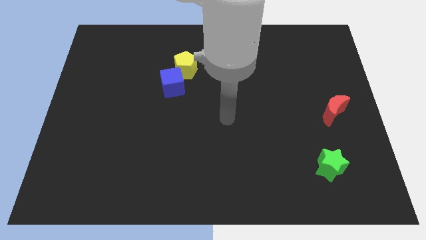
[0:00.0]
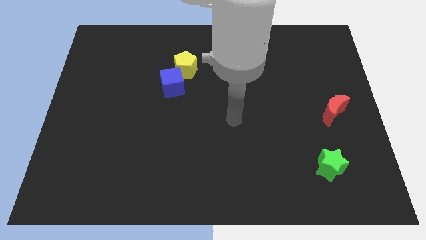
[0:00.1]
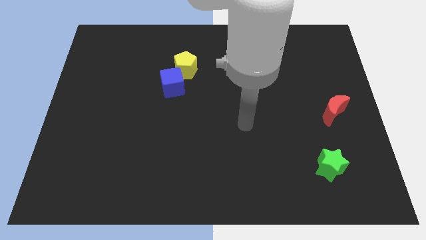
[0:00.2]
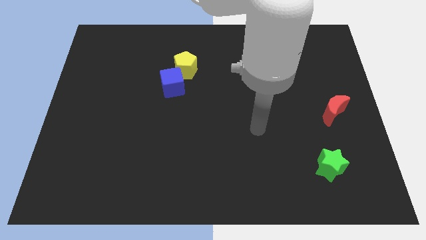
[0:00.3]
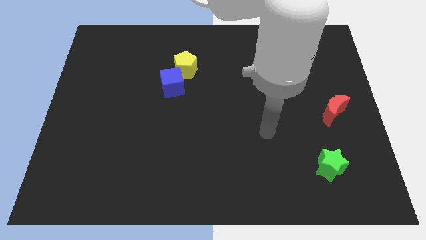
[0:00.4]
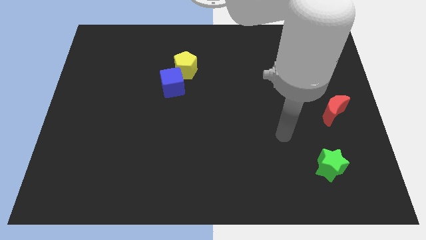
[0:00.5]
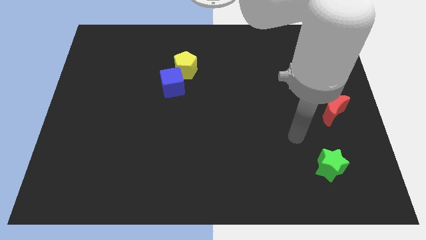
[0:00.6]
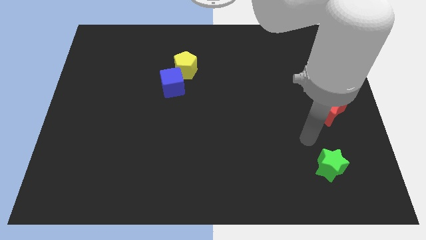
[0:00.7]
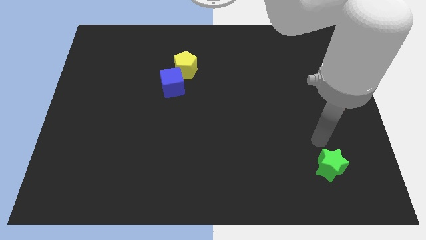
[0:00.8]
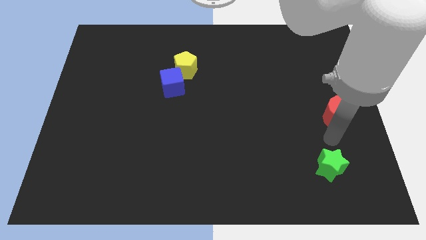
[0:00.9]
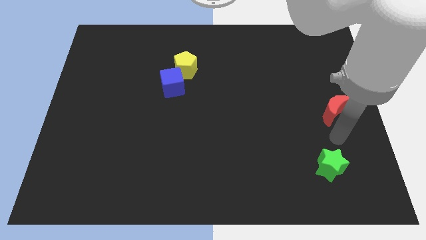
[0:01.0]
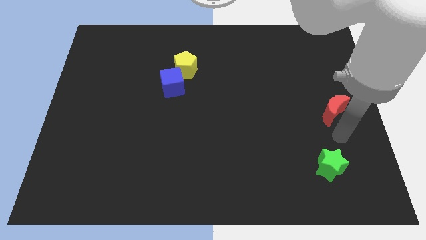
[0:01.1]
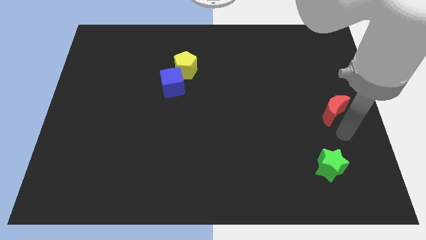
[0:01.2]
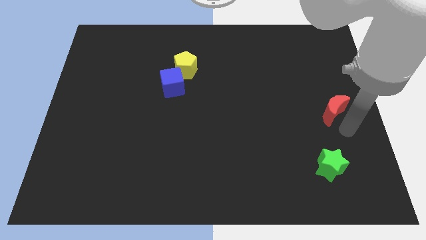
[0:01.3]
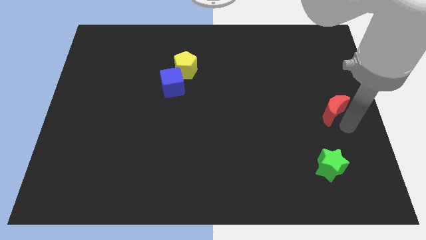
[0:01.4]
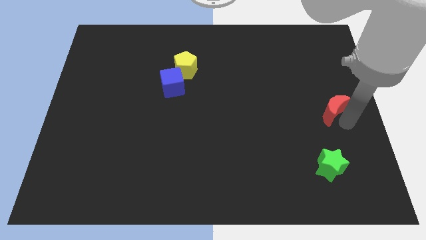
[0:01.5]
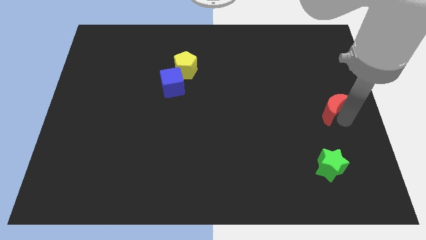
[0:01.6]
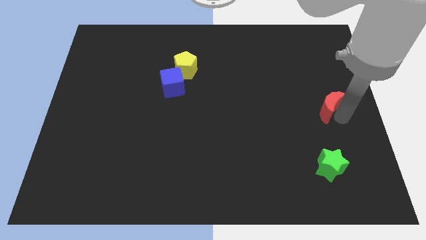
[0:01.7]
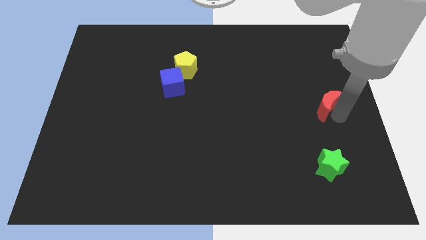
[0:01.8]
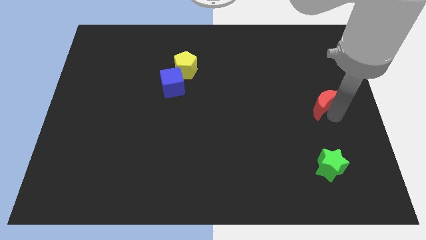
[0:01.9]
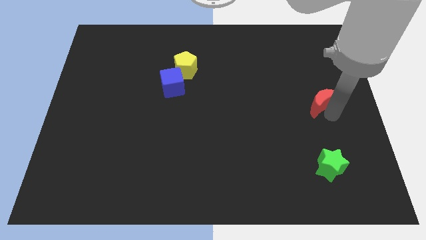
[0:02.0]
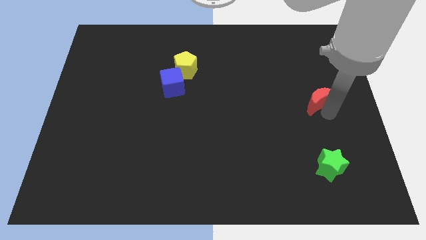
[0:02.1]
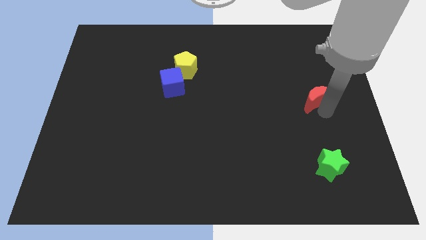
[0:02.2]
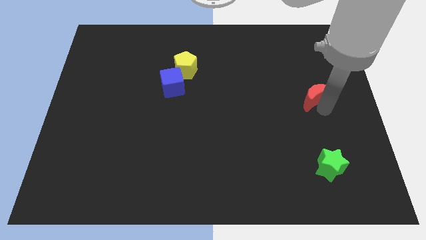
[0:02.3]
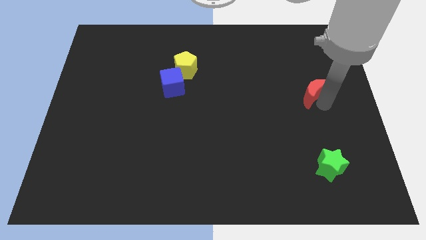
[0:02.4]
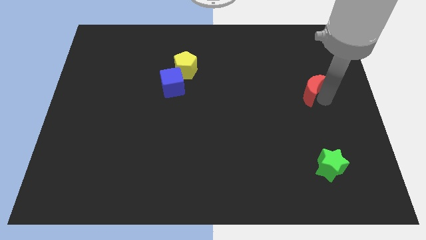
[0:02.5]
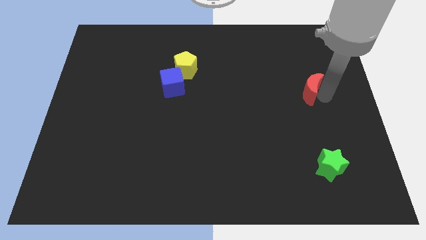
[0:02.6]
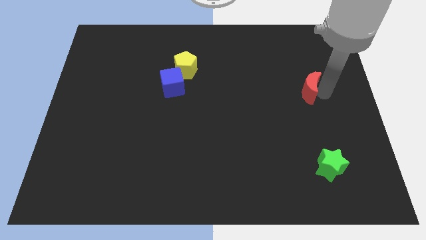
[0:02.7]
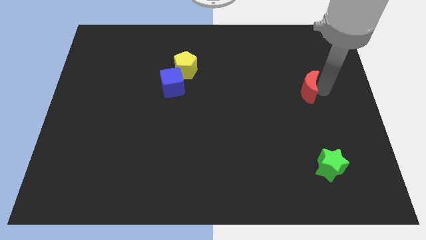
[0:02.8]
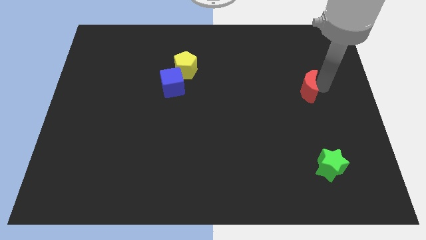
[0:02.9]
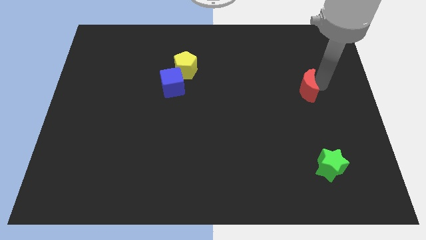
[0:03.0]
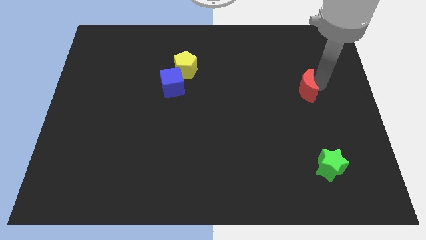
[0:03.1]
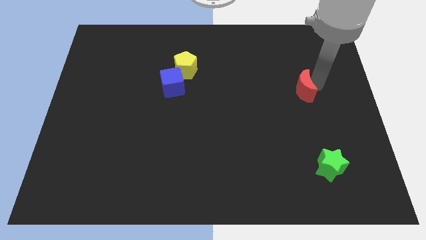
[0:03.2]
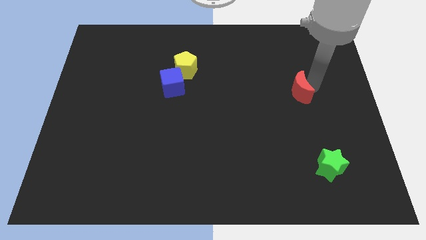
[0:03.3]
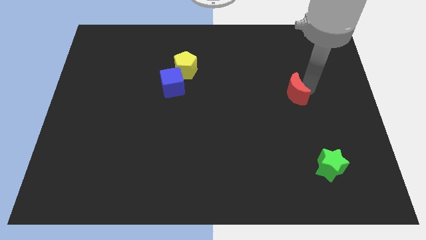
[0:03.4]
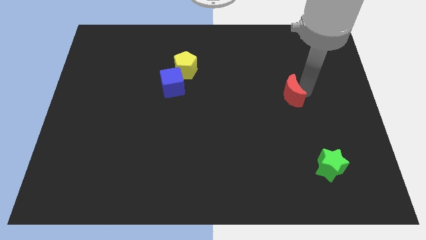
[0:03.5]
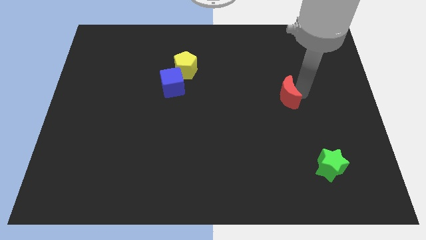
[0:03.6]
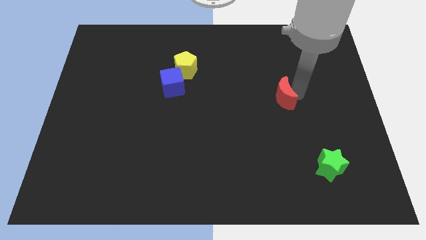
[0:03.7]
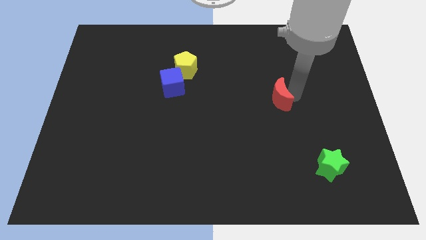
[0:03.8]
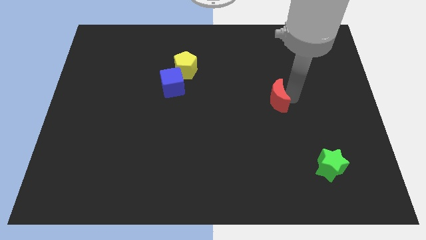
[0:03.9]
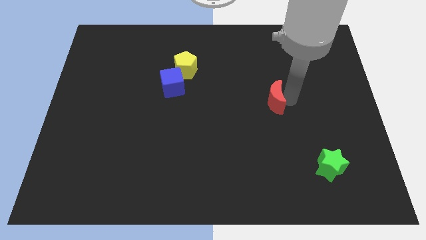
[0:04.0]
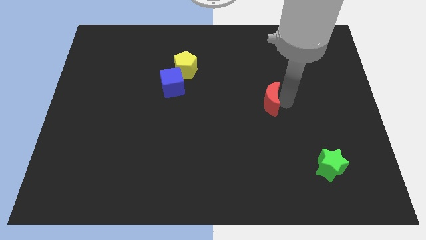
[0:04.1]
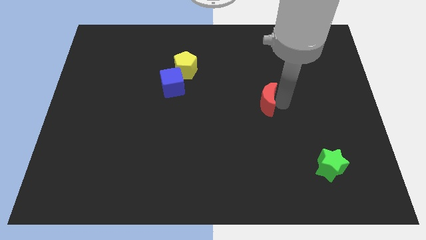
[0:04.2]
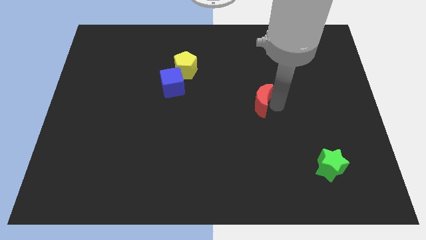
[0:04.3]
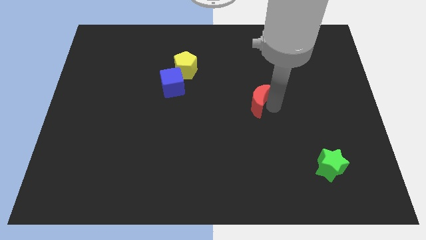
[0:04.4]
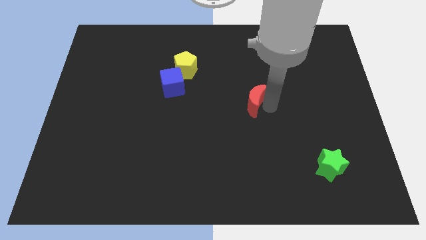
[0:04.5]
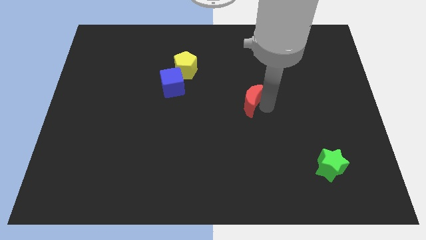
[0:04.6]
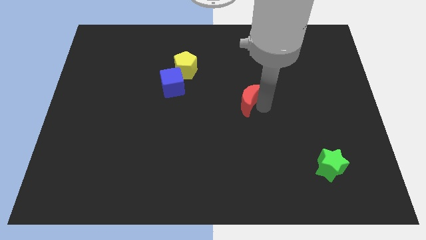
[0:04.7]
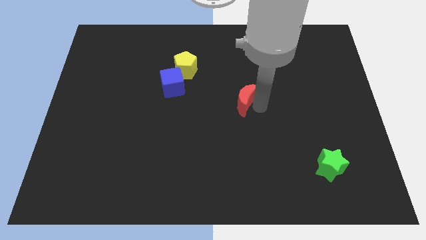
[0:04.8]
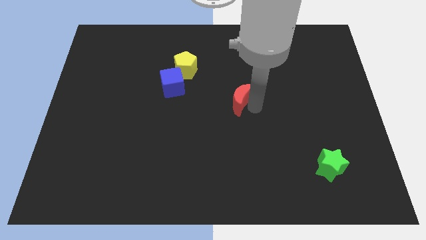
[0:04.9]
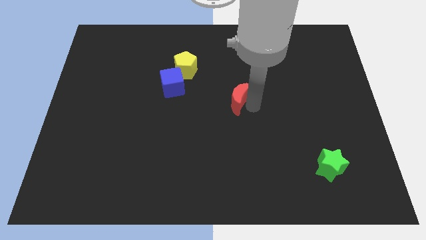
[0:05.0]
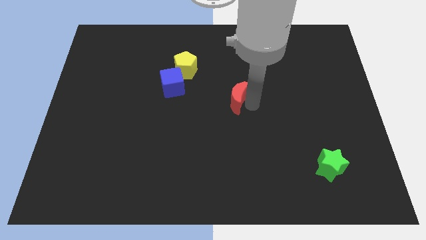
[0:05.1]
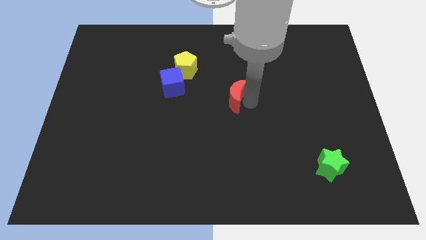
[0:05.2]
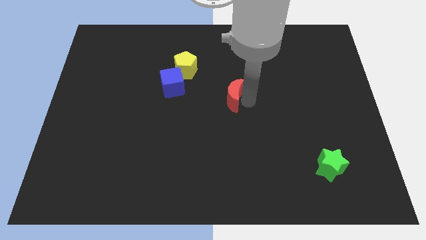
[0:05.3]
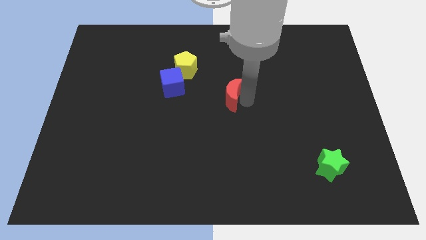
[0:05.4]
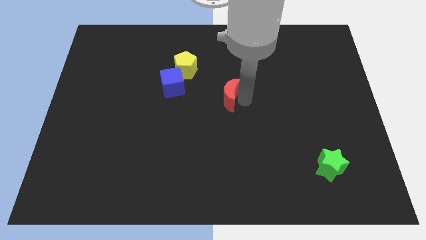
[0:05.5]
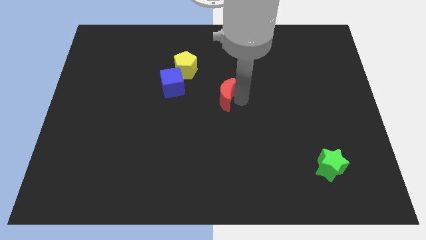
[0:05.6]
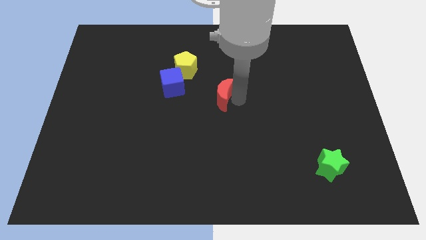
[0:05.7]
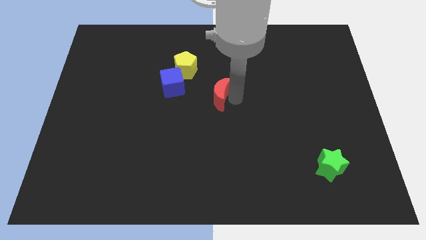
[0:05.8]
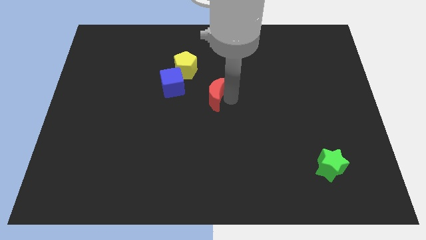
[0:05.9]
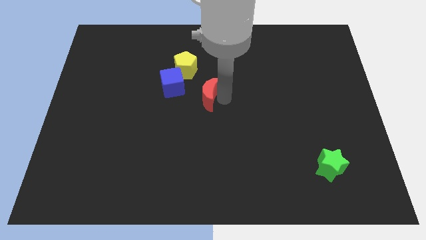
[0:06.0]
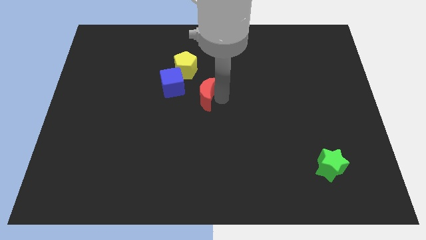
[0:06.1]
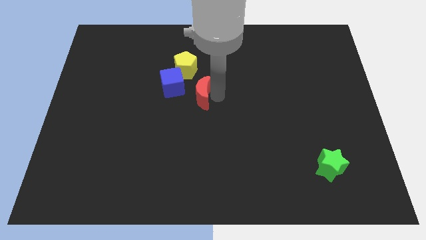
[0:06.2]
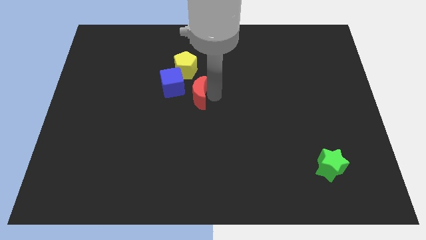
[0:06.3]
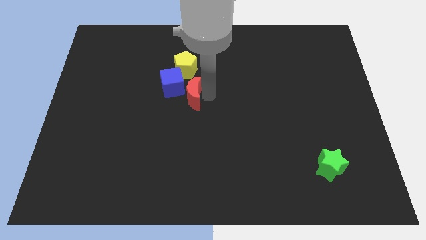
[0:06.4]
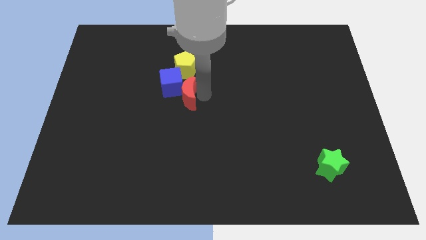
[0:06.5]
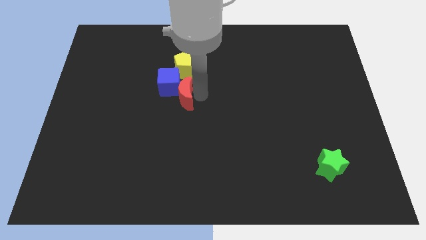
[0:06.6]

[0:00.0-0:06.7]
put the moon towards the cube

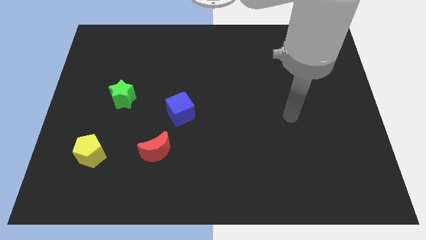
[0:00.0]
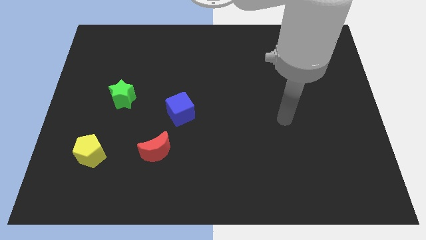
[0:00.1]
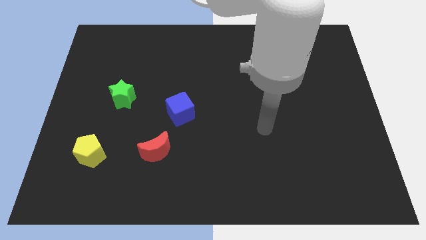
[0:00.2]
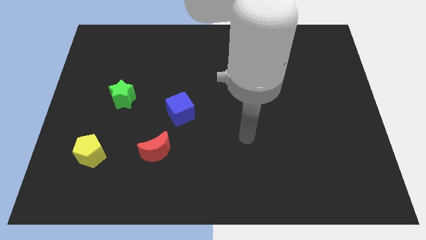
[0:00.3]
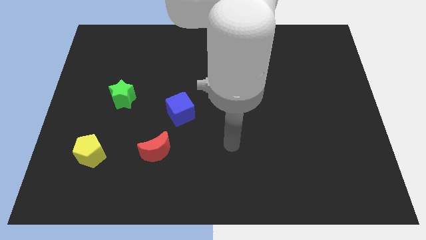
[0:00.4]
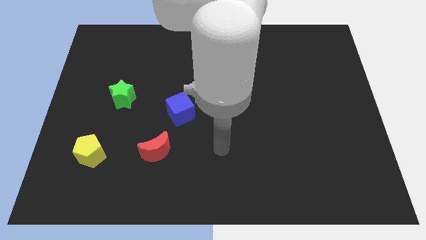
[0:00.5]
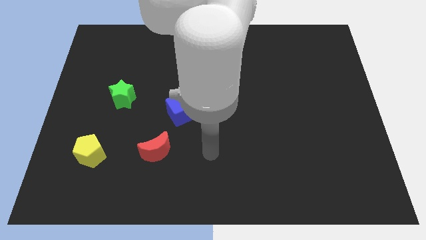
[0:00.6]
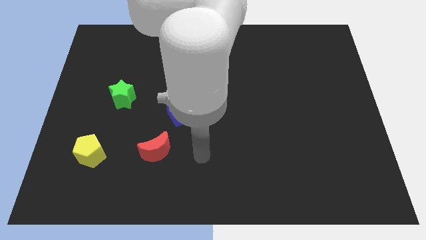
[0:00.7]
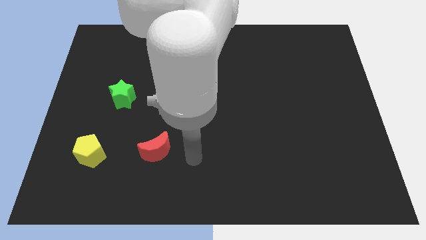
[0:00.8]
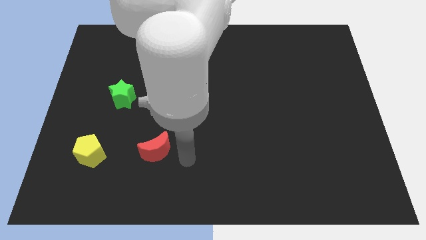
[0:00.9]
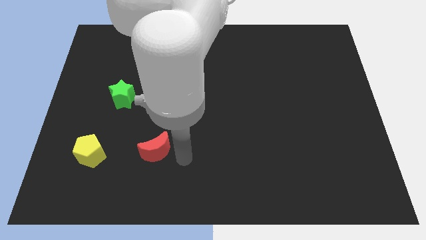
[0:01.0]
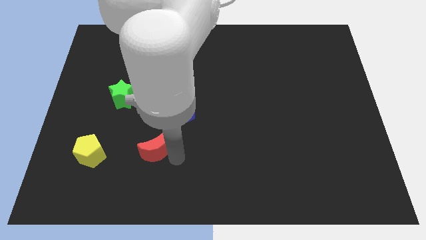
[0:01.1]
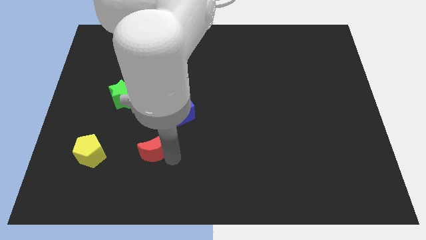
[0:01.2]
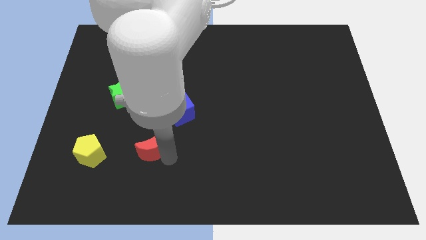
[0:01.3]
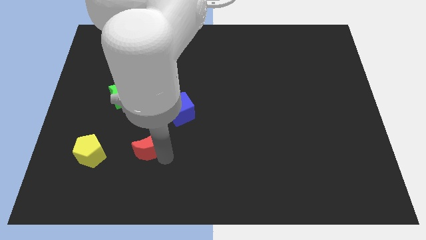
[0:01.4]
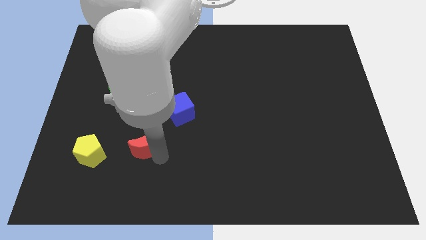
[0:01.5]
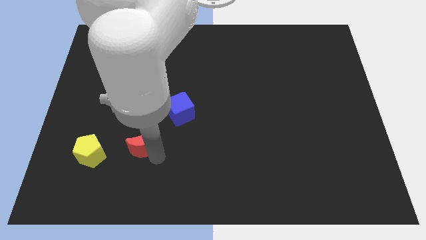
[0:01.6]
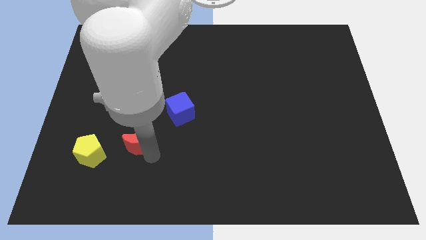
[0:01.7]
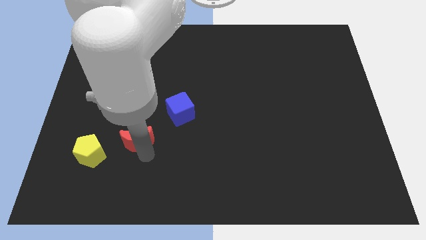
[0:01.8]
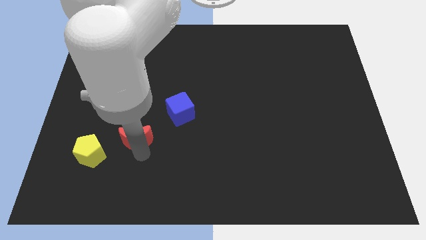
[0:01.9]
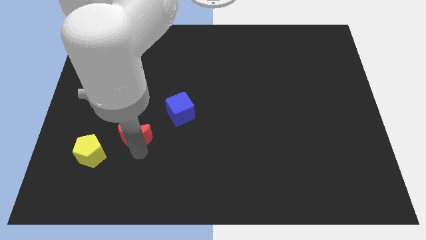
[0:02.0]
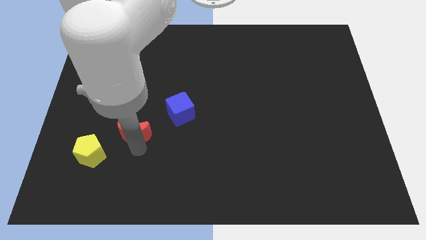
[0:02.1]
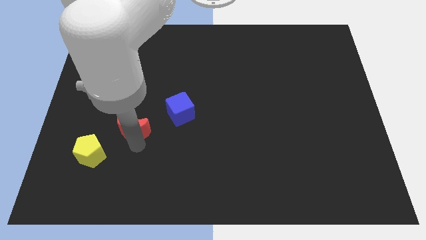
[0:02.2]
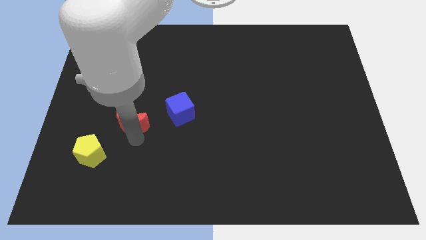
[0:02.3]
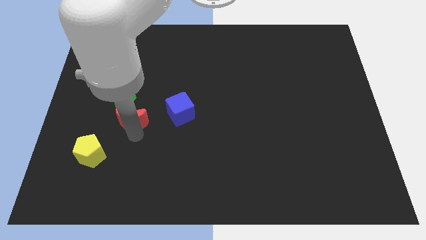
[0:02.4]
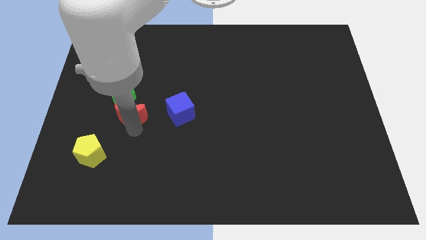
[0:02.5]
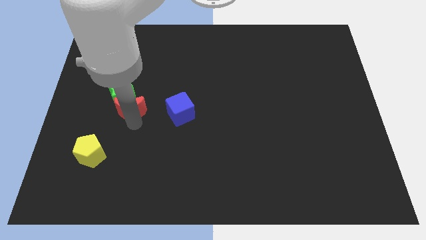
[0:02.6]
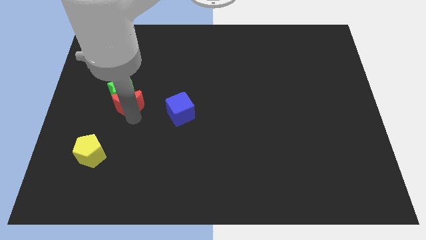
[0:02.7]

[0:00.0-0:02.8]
move the moon towards the green block
